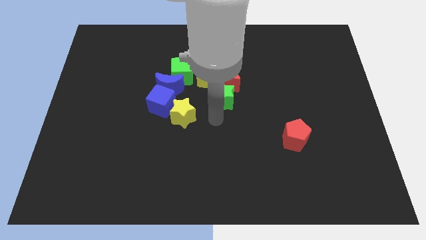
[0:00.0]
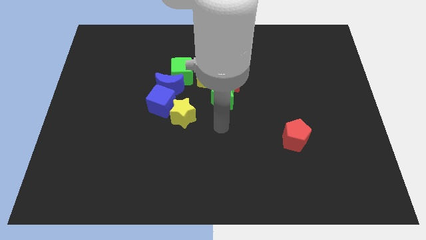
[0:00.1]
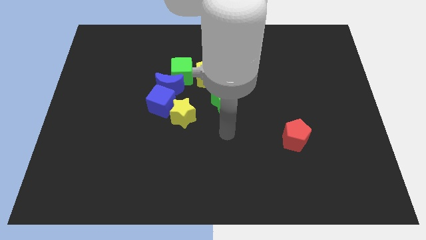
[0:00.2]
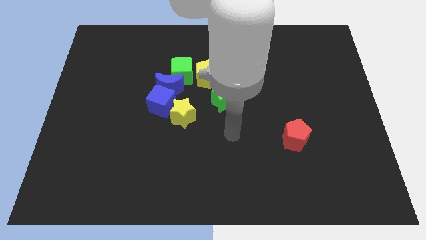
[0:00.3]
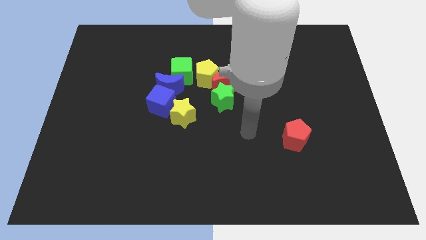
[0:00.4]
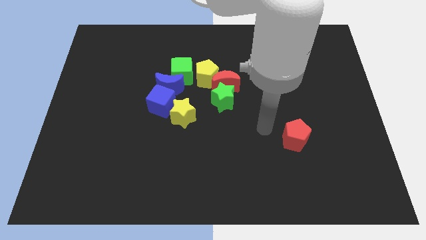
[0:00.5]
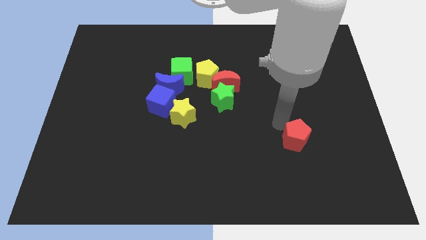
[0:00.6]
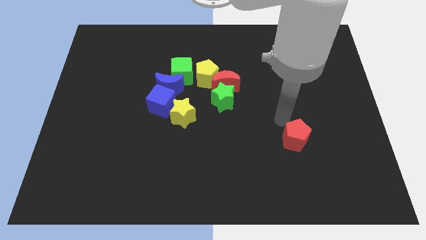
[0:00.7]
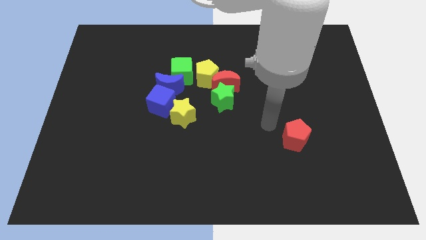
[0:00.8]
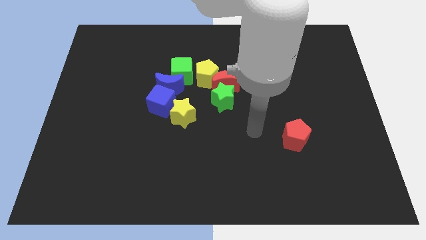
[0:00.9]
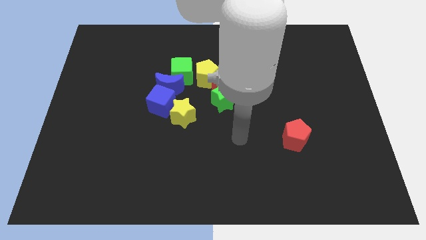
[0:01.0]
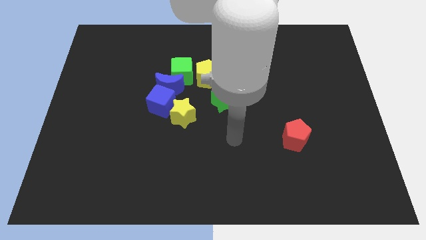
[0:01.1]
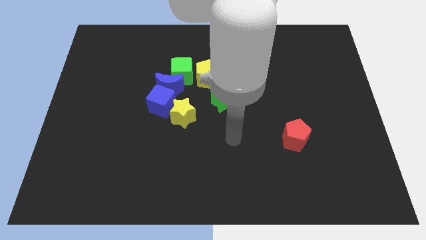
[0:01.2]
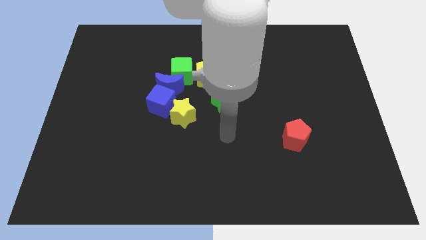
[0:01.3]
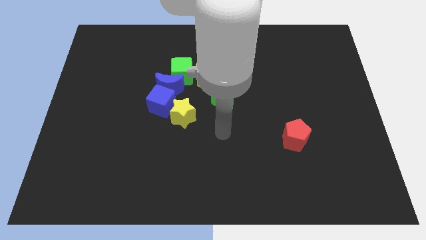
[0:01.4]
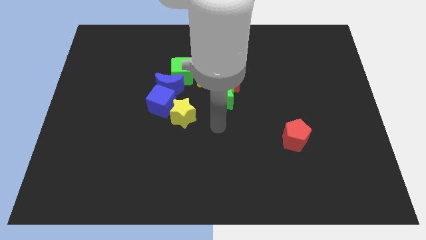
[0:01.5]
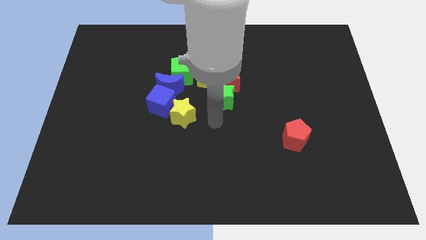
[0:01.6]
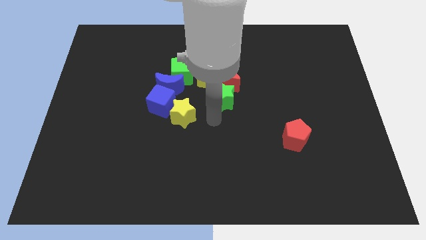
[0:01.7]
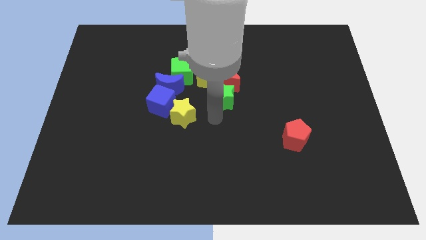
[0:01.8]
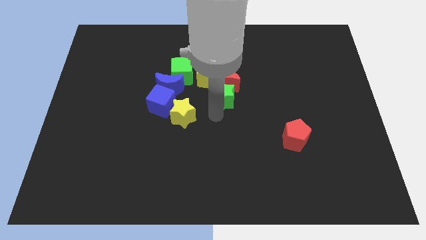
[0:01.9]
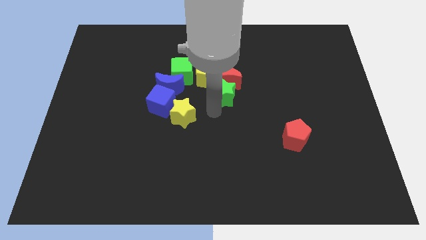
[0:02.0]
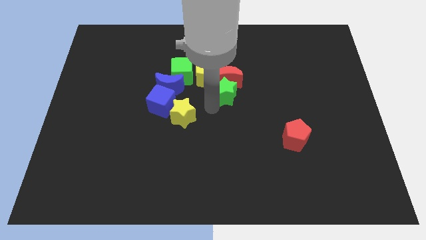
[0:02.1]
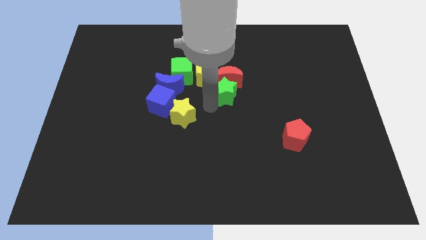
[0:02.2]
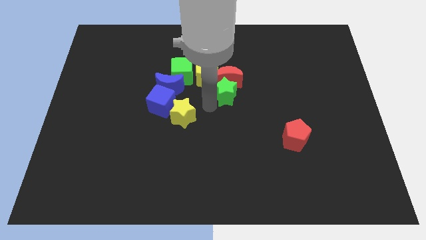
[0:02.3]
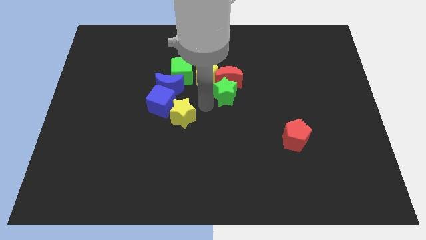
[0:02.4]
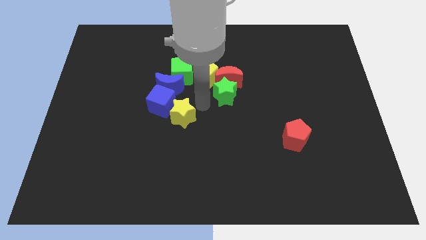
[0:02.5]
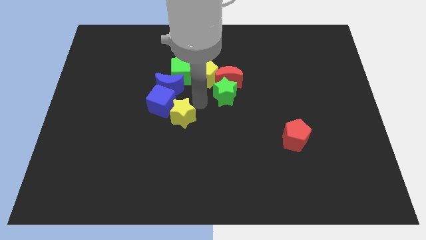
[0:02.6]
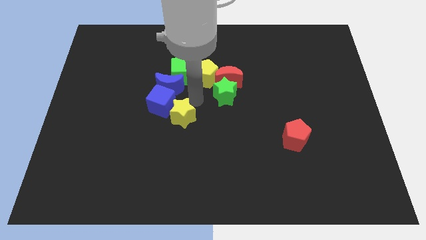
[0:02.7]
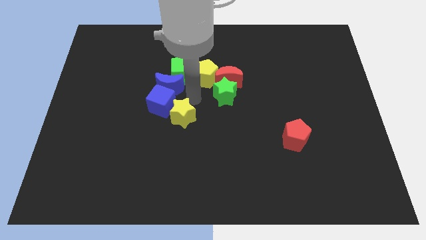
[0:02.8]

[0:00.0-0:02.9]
move the green star towards the bottom side of the red pentagon

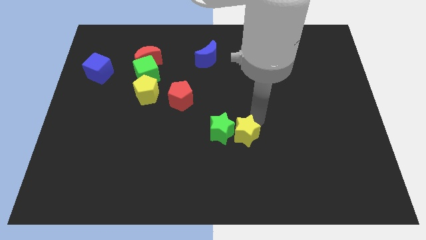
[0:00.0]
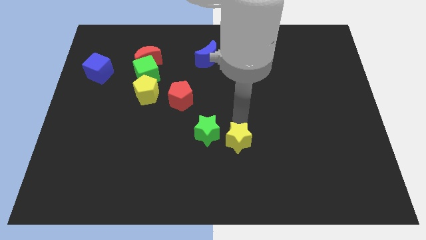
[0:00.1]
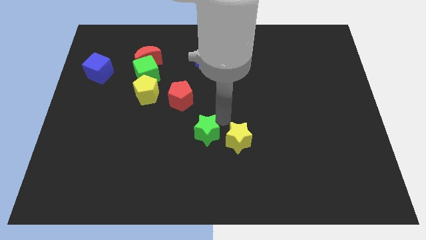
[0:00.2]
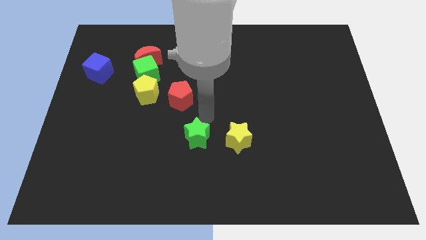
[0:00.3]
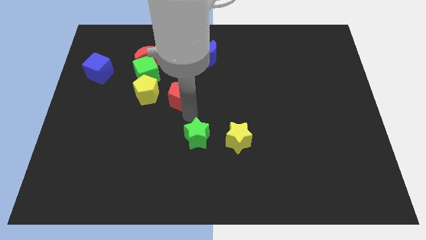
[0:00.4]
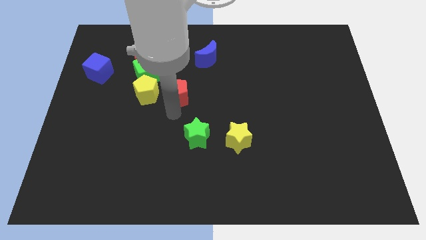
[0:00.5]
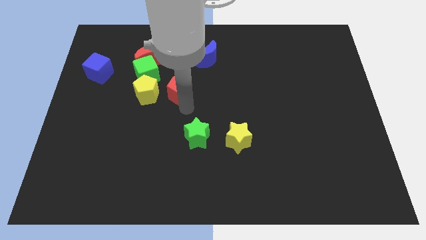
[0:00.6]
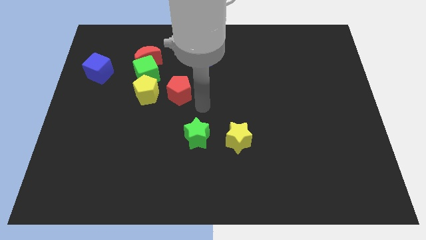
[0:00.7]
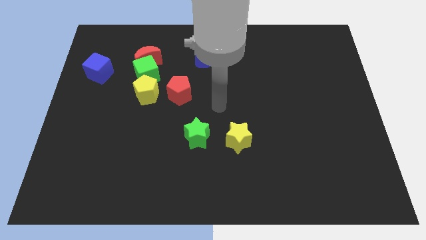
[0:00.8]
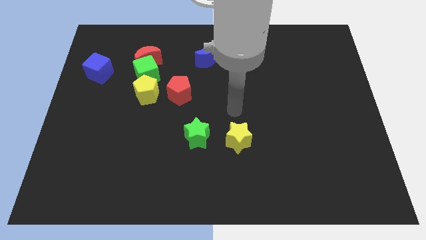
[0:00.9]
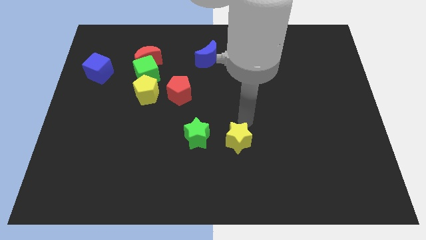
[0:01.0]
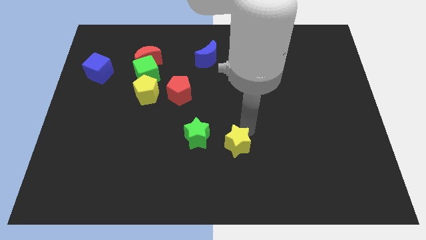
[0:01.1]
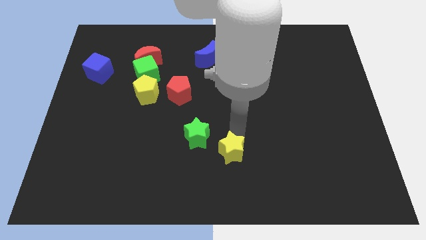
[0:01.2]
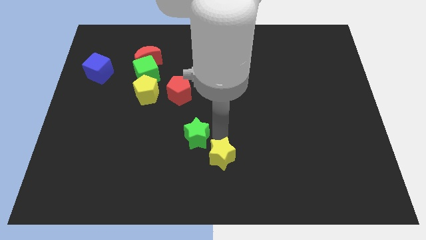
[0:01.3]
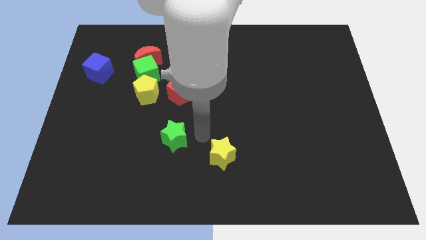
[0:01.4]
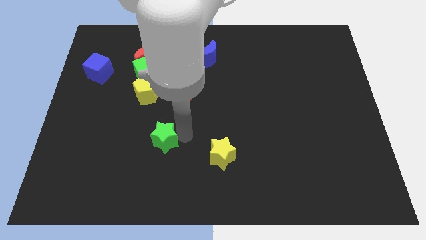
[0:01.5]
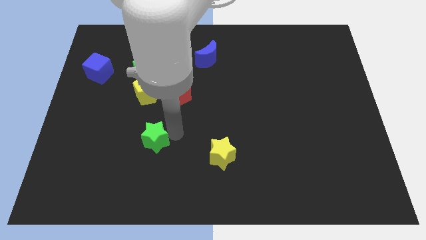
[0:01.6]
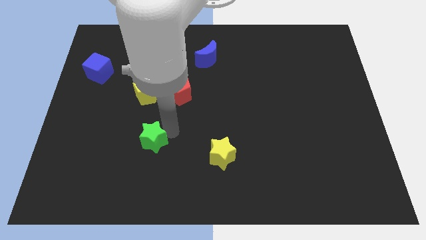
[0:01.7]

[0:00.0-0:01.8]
separate the green star and yellow star from each other

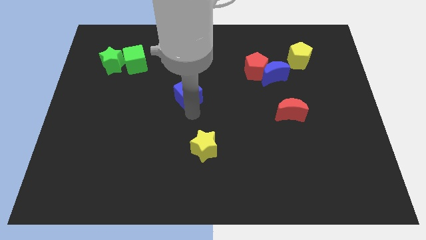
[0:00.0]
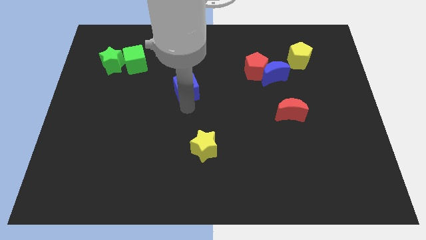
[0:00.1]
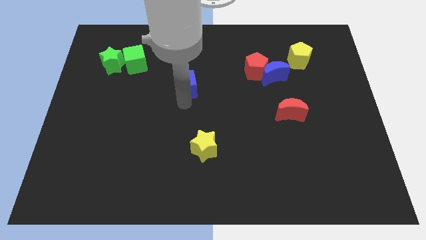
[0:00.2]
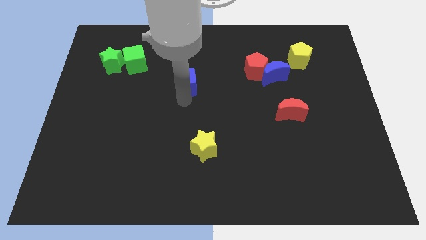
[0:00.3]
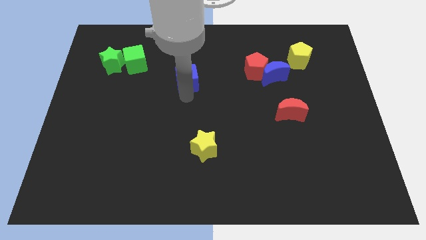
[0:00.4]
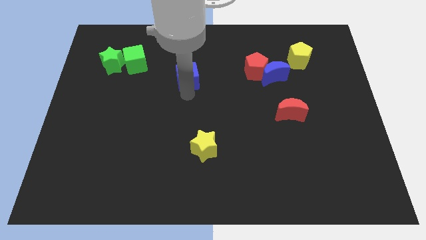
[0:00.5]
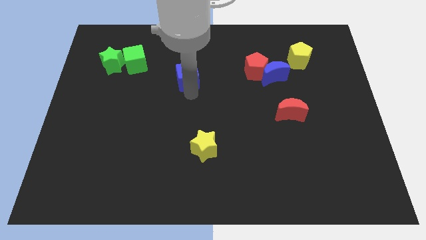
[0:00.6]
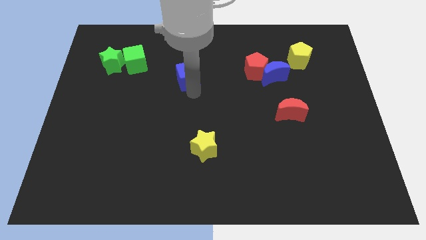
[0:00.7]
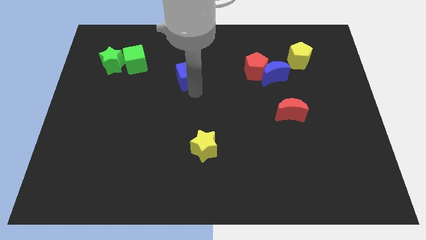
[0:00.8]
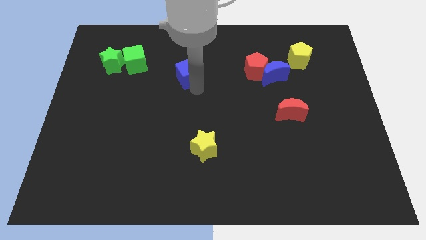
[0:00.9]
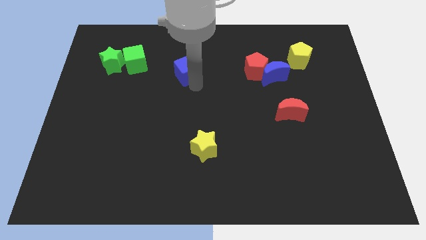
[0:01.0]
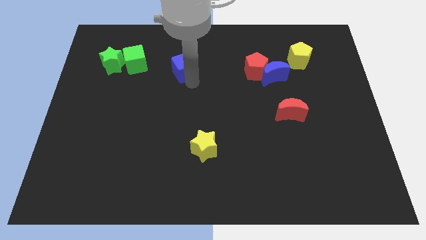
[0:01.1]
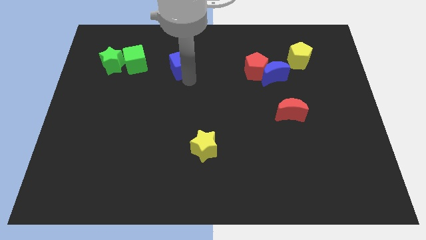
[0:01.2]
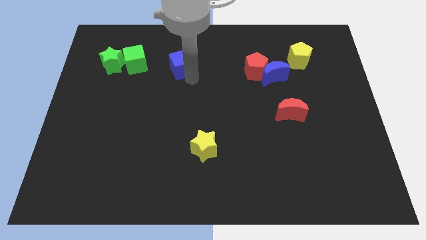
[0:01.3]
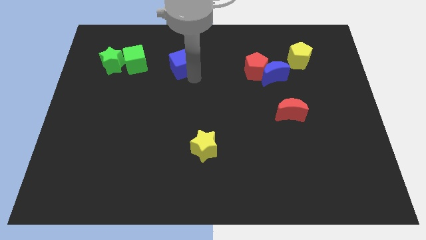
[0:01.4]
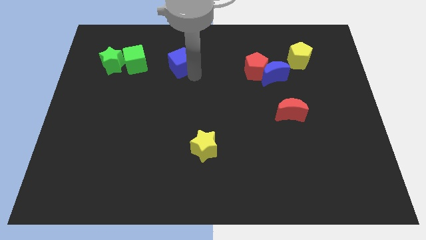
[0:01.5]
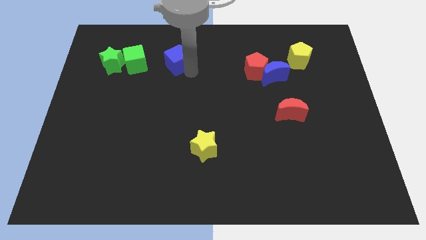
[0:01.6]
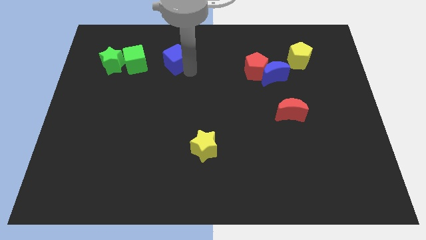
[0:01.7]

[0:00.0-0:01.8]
place the blue cube to the right of green cube

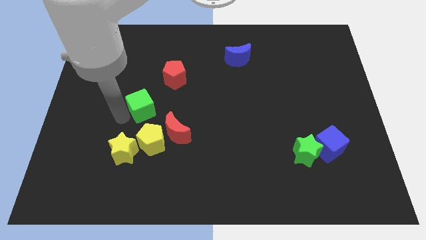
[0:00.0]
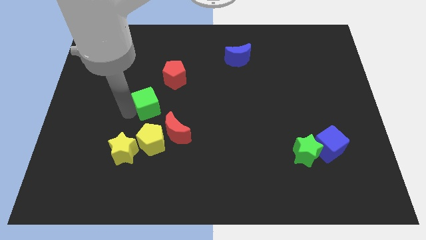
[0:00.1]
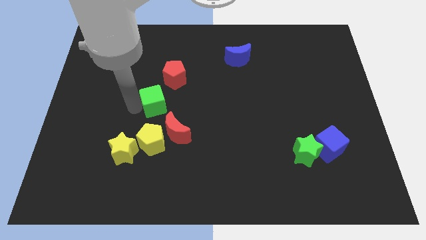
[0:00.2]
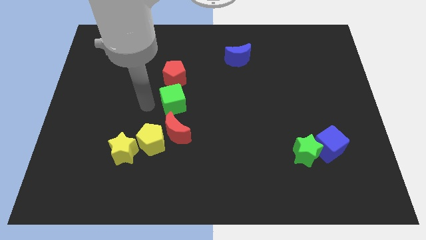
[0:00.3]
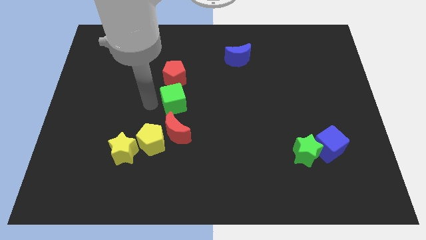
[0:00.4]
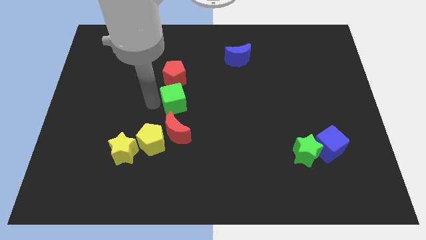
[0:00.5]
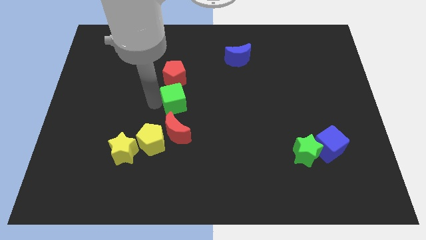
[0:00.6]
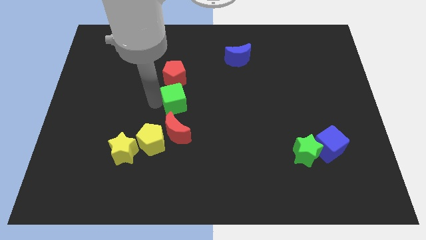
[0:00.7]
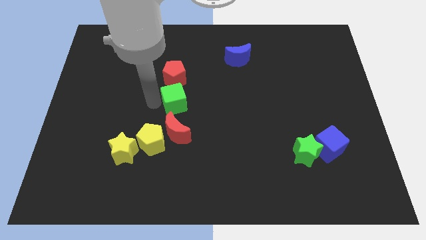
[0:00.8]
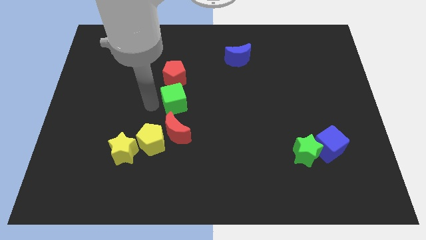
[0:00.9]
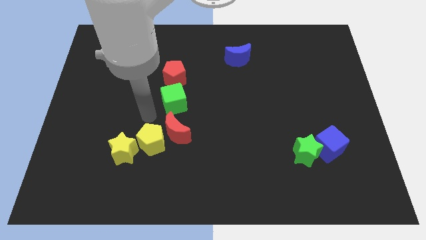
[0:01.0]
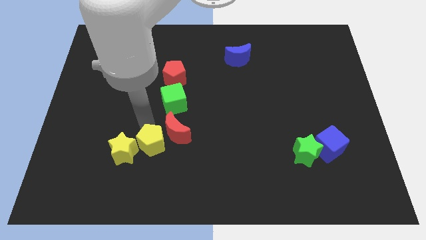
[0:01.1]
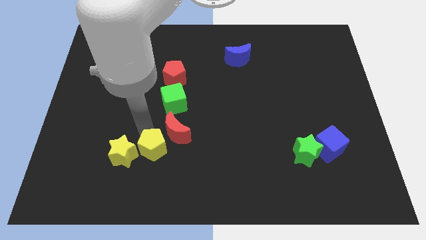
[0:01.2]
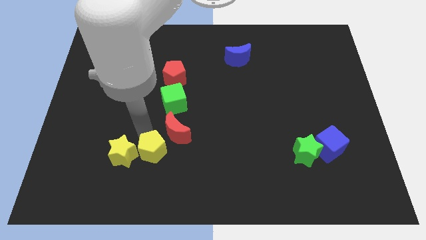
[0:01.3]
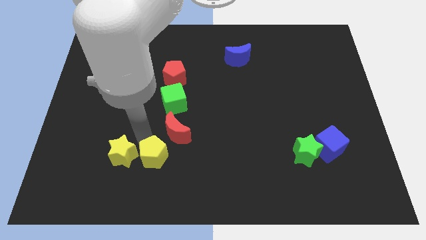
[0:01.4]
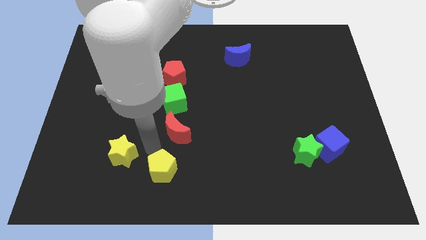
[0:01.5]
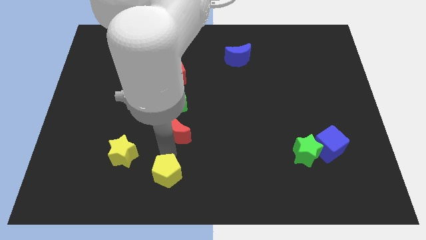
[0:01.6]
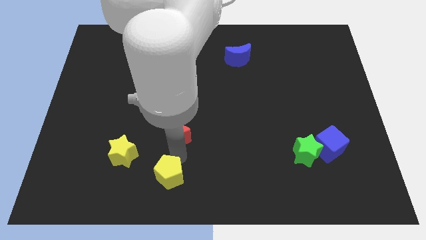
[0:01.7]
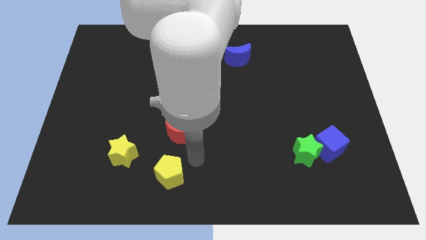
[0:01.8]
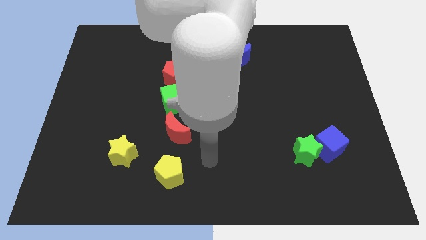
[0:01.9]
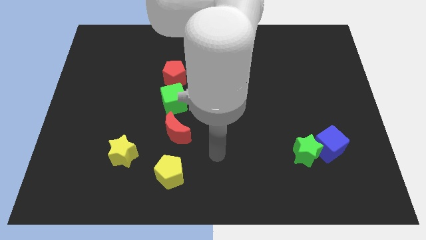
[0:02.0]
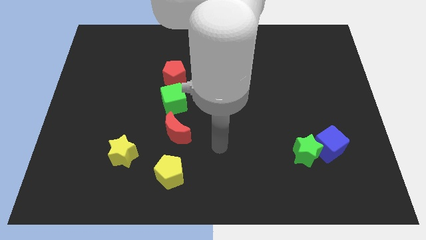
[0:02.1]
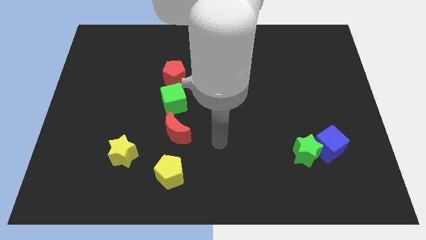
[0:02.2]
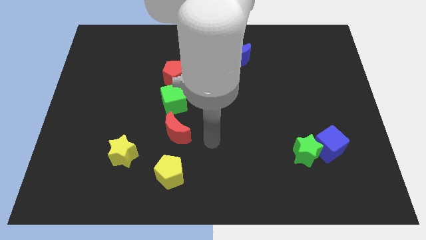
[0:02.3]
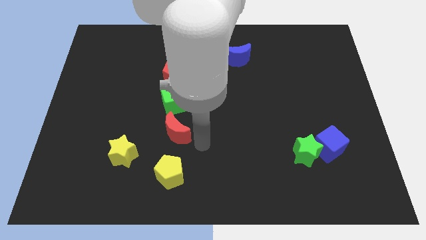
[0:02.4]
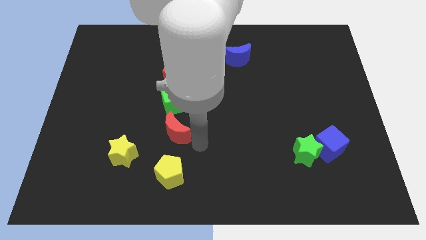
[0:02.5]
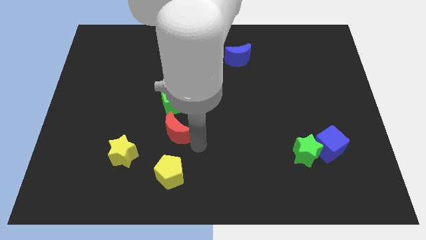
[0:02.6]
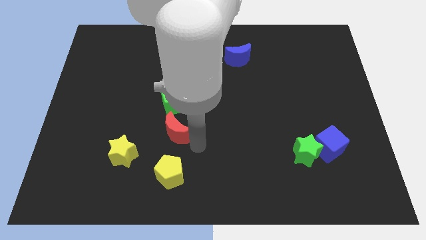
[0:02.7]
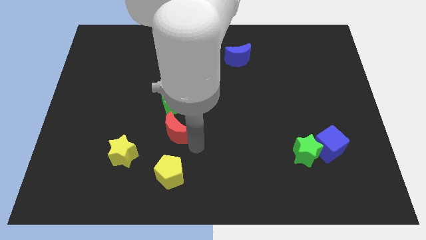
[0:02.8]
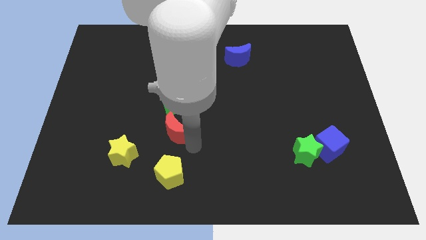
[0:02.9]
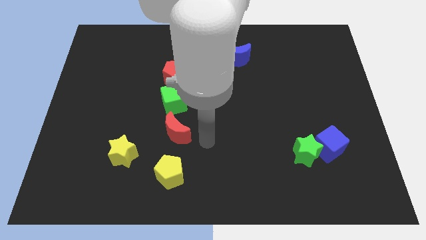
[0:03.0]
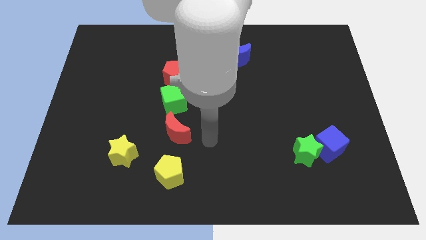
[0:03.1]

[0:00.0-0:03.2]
slide the yellow pentagon below the red moon
